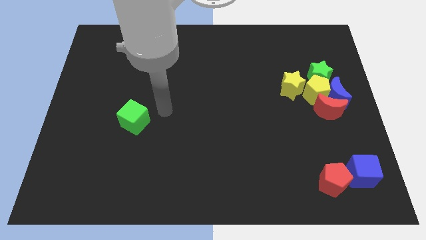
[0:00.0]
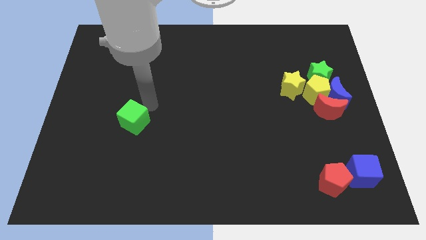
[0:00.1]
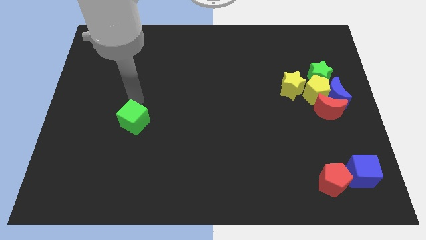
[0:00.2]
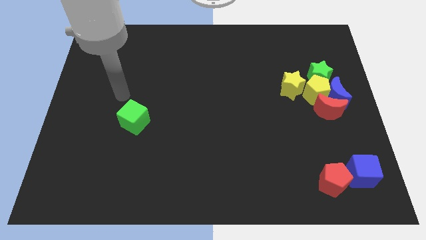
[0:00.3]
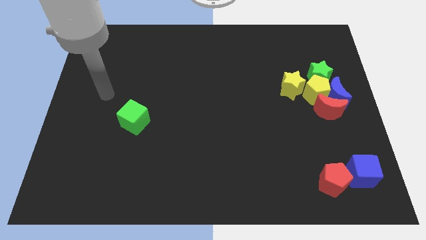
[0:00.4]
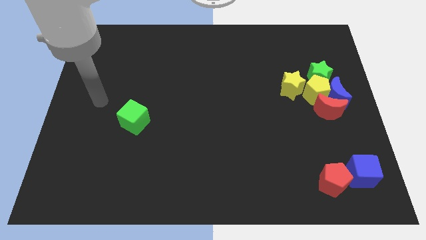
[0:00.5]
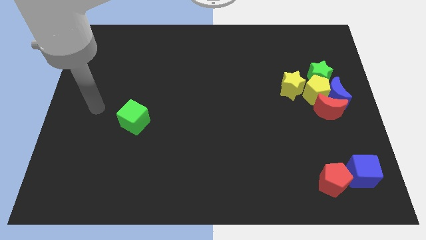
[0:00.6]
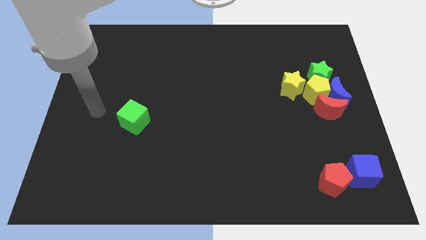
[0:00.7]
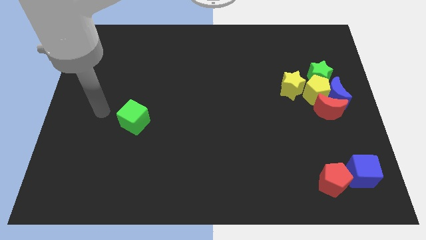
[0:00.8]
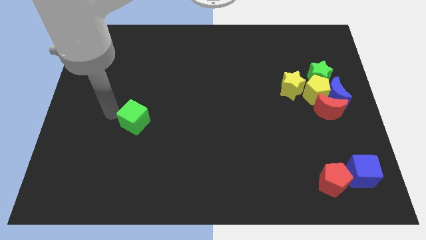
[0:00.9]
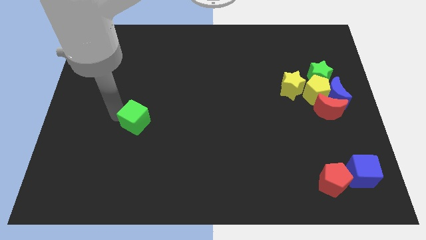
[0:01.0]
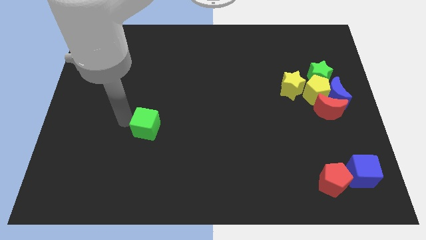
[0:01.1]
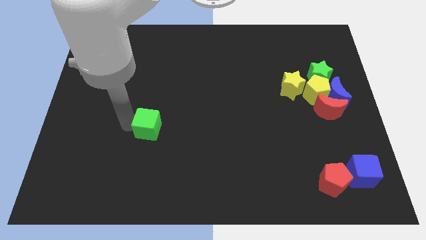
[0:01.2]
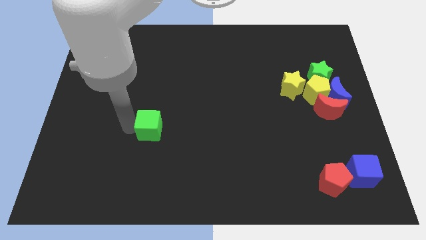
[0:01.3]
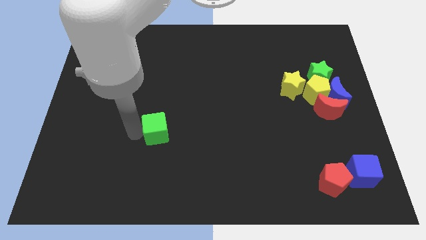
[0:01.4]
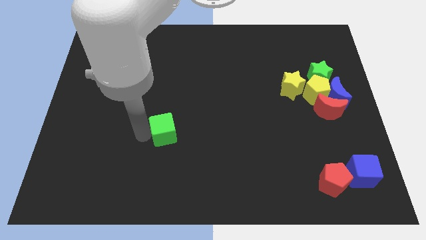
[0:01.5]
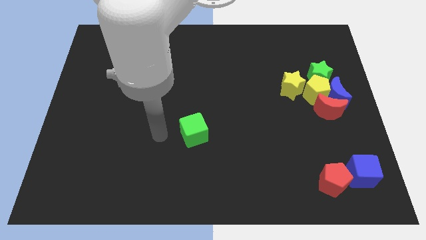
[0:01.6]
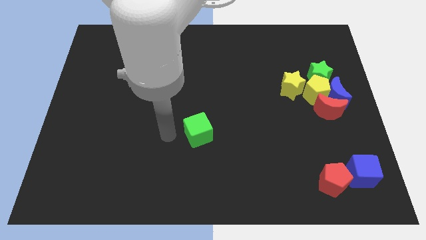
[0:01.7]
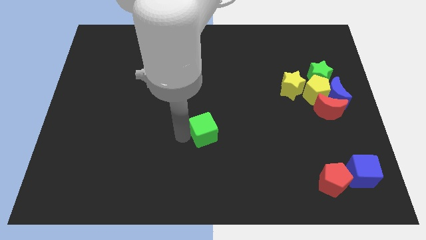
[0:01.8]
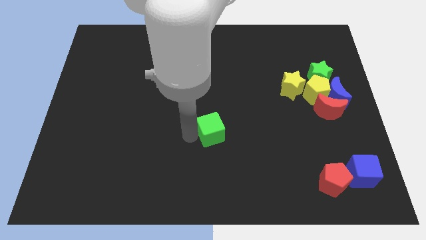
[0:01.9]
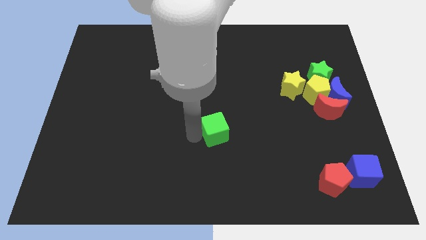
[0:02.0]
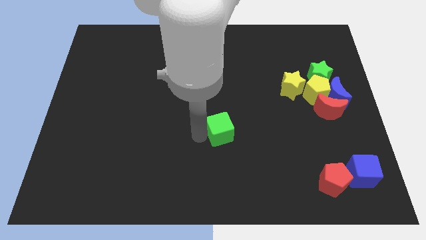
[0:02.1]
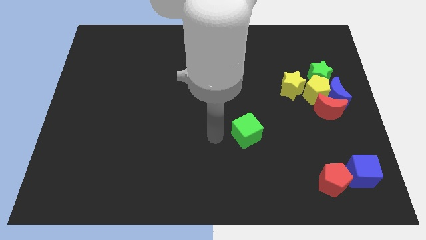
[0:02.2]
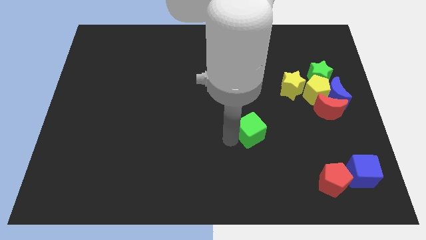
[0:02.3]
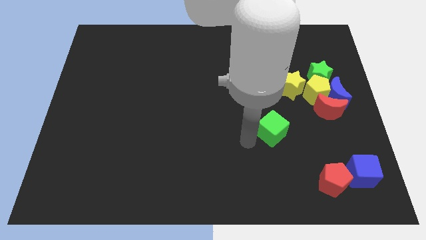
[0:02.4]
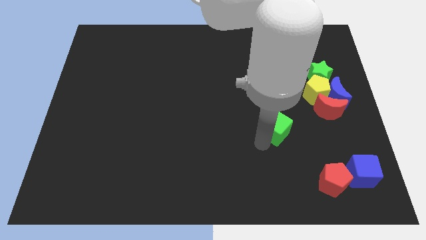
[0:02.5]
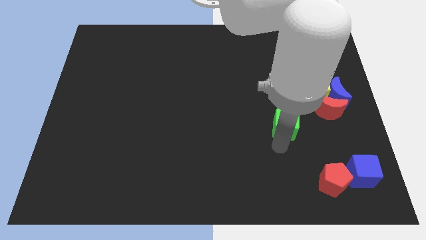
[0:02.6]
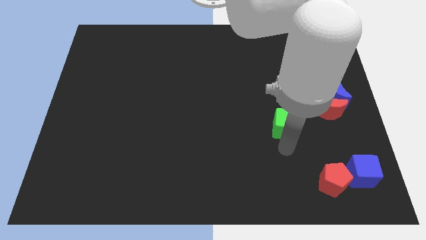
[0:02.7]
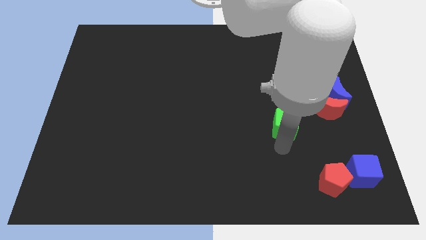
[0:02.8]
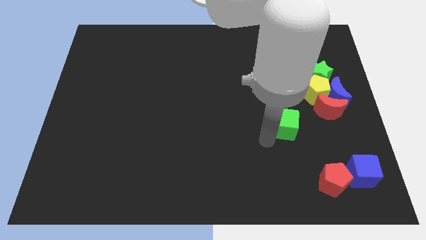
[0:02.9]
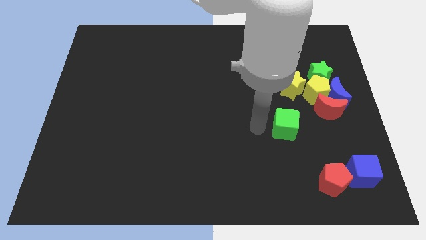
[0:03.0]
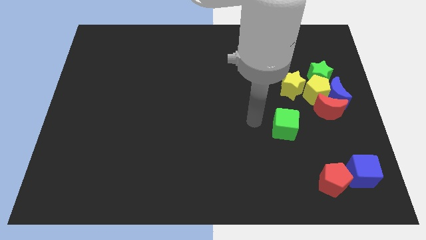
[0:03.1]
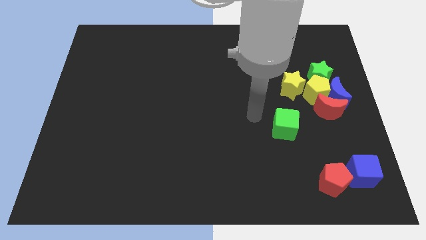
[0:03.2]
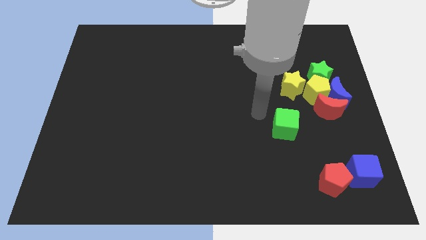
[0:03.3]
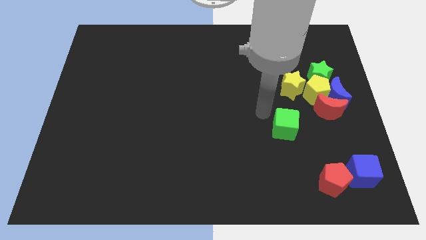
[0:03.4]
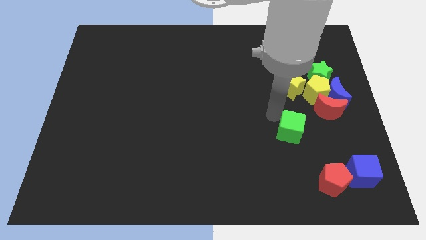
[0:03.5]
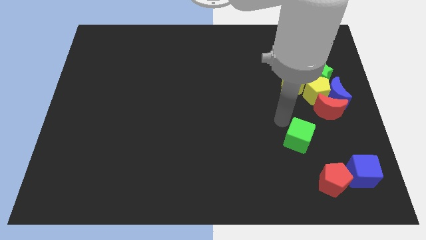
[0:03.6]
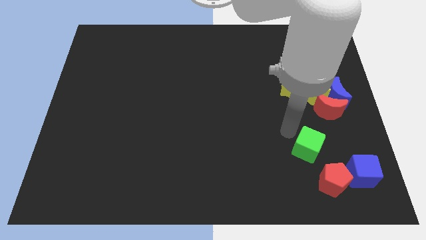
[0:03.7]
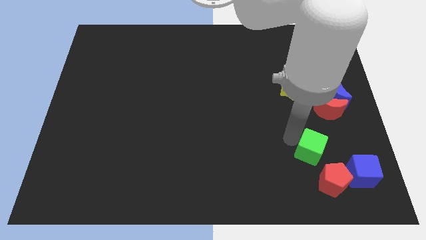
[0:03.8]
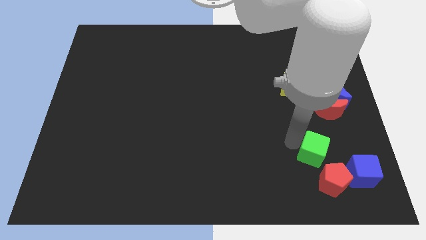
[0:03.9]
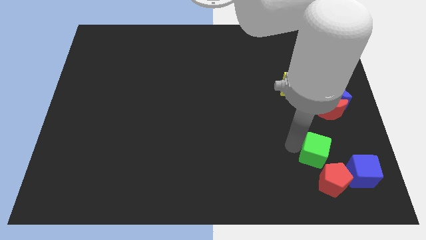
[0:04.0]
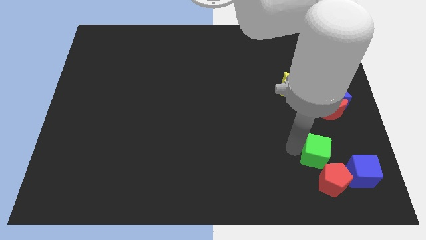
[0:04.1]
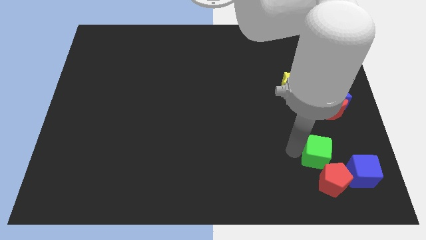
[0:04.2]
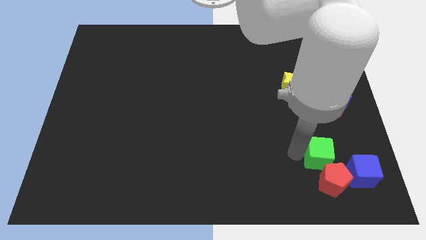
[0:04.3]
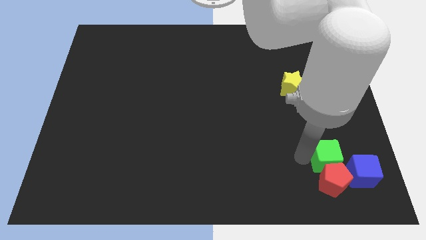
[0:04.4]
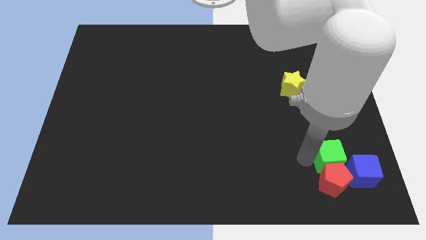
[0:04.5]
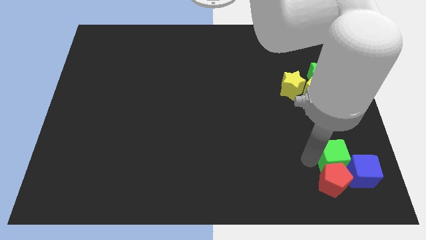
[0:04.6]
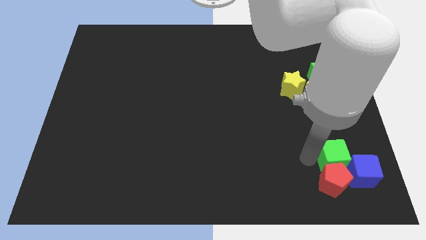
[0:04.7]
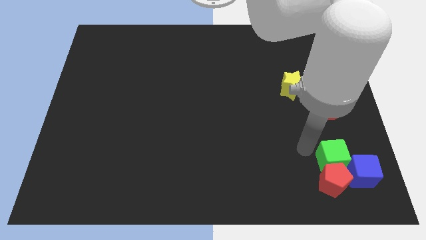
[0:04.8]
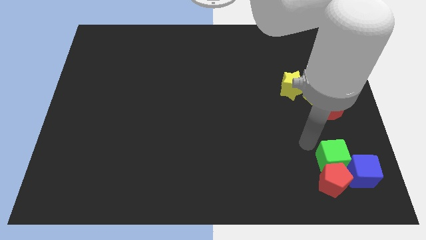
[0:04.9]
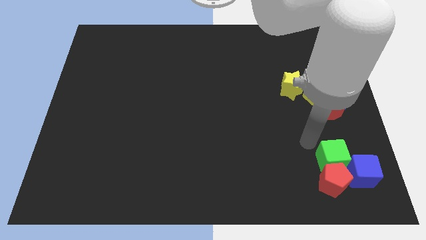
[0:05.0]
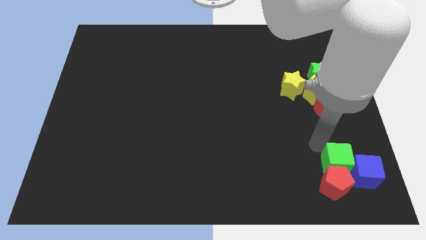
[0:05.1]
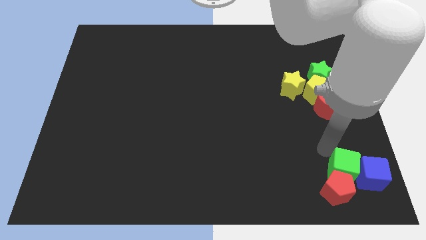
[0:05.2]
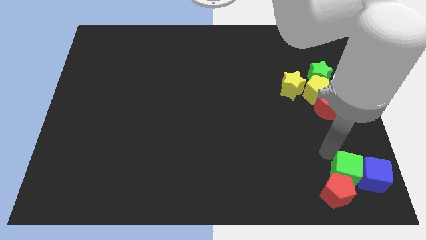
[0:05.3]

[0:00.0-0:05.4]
slide the green cube into the red pentagon and blue cube

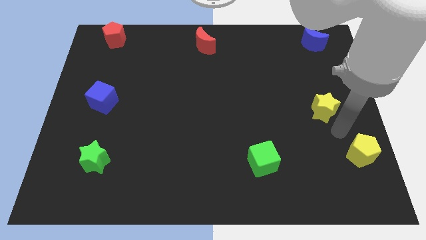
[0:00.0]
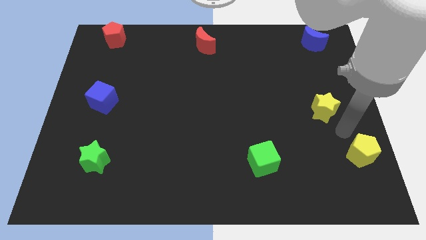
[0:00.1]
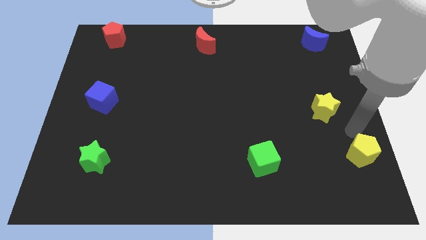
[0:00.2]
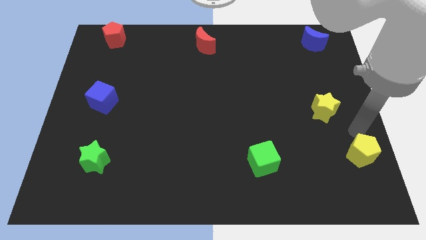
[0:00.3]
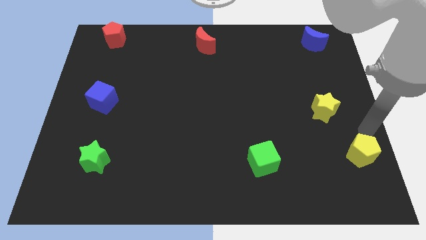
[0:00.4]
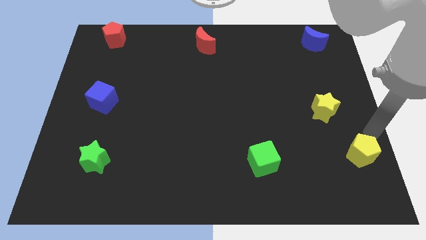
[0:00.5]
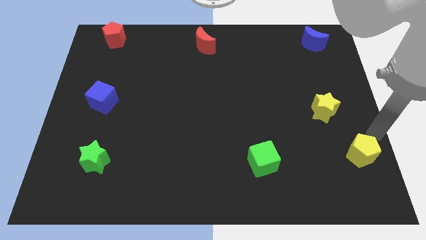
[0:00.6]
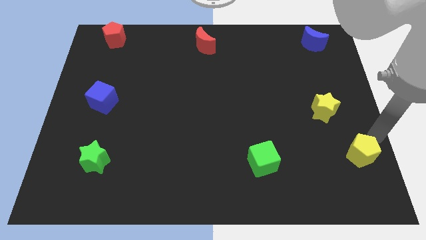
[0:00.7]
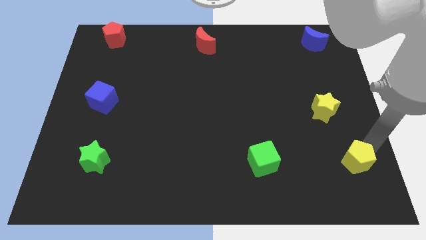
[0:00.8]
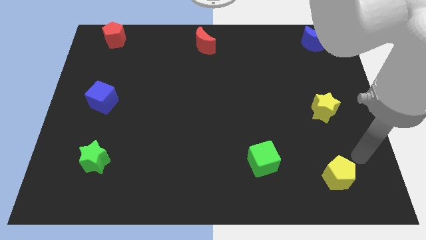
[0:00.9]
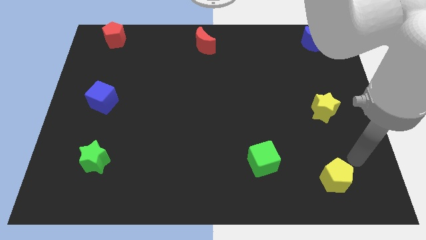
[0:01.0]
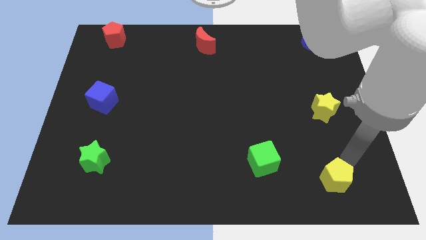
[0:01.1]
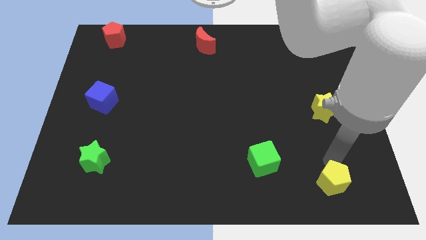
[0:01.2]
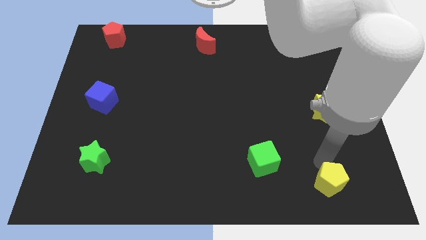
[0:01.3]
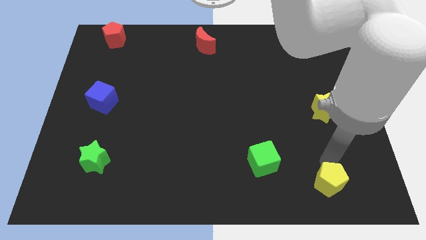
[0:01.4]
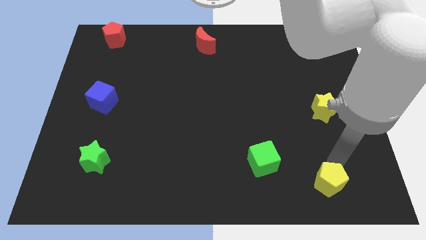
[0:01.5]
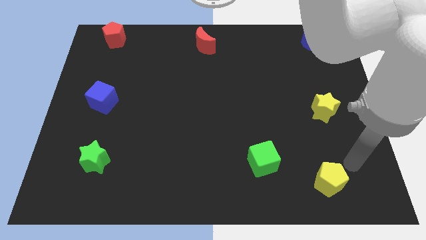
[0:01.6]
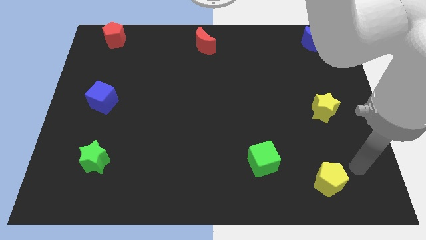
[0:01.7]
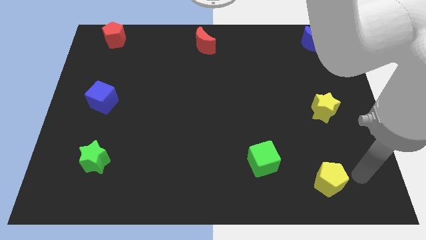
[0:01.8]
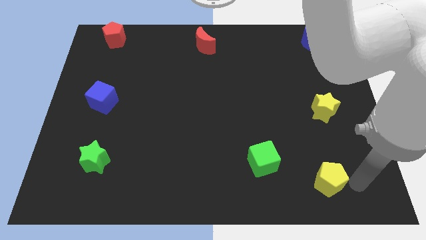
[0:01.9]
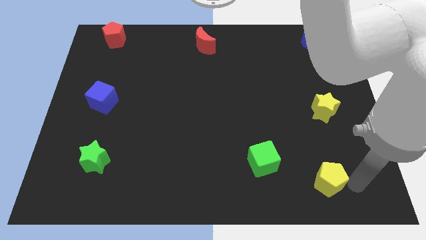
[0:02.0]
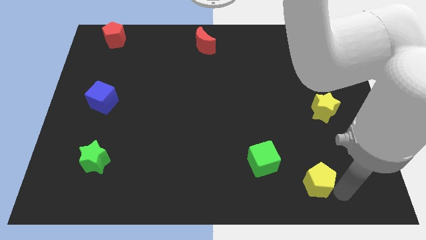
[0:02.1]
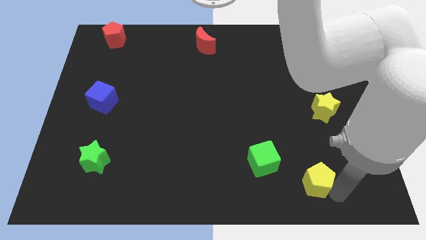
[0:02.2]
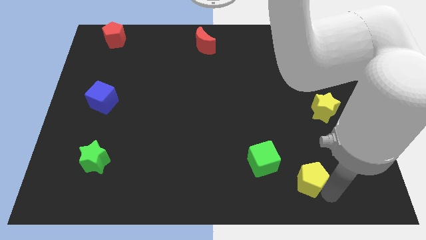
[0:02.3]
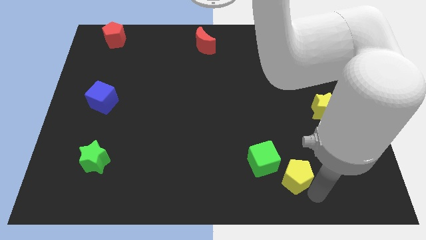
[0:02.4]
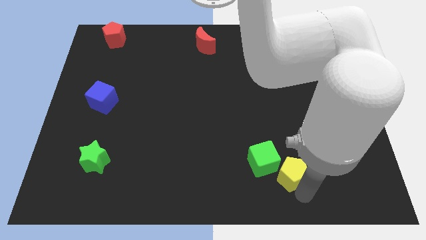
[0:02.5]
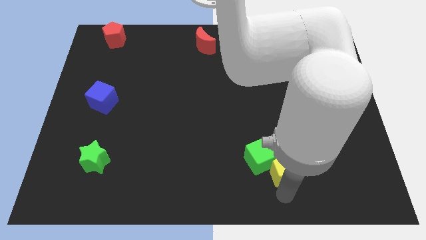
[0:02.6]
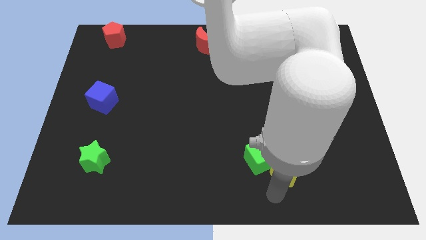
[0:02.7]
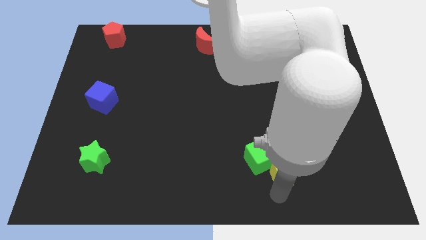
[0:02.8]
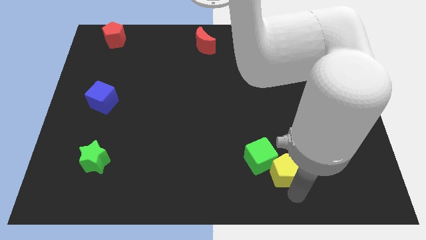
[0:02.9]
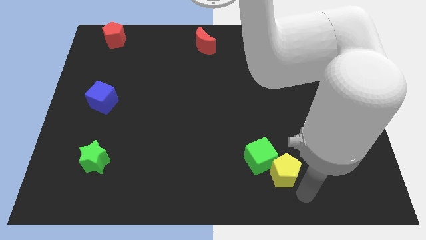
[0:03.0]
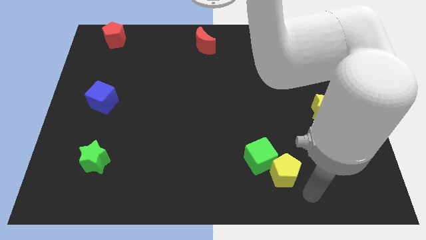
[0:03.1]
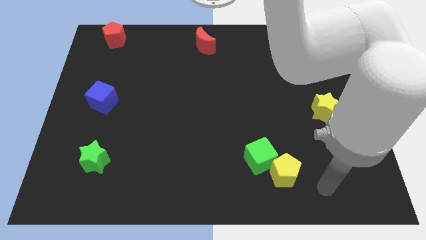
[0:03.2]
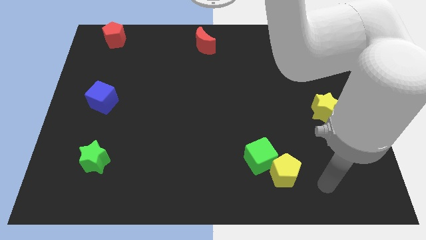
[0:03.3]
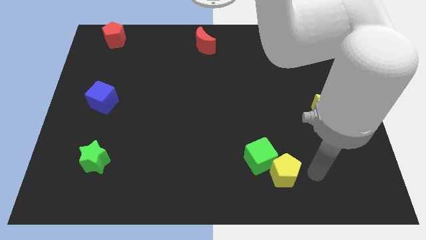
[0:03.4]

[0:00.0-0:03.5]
place yellow pentagon below green cube

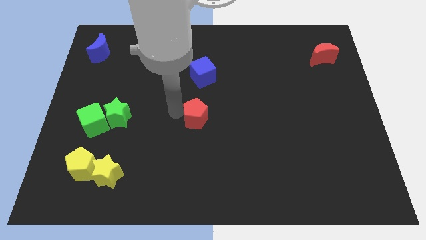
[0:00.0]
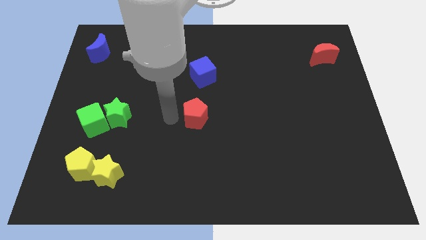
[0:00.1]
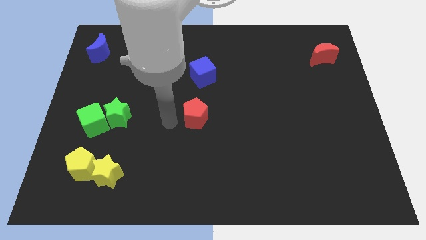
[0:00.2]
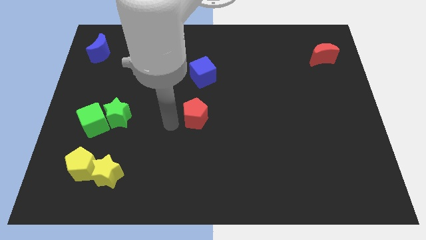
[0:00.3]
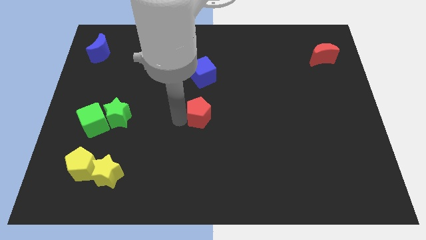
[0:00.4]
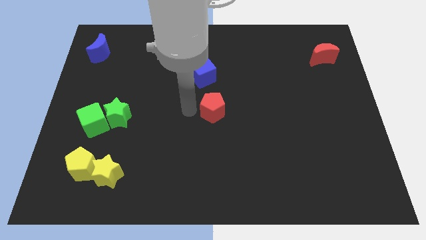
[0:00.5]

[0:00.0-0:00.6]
move red pentagon at center
